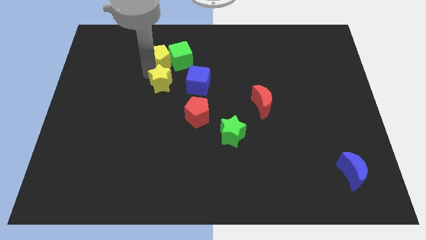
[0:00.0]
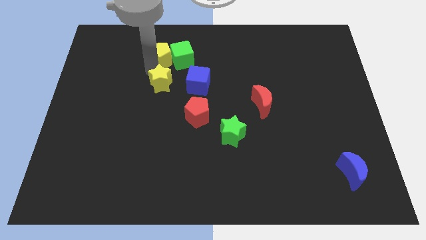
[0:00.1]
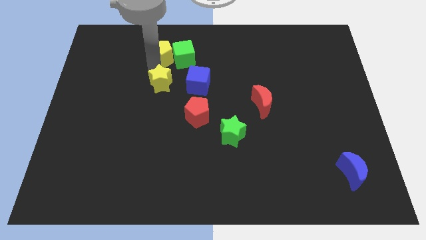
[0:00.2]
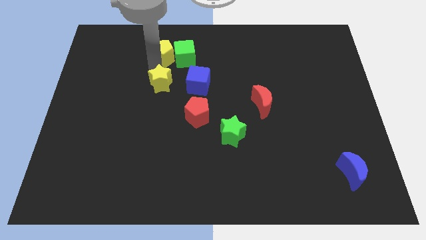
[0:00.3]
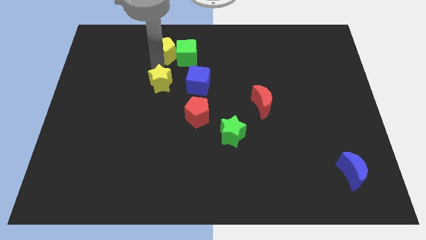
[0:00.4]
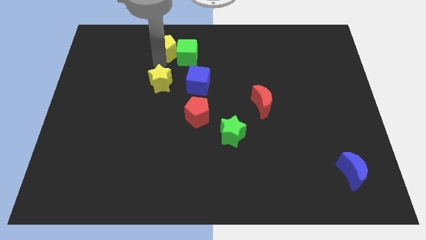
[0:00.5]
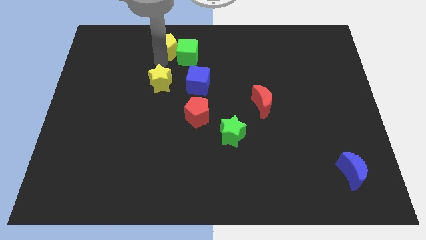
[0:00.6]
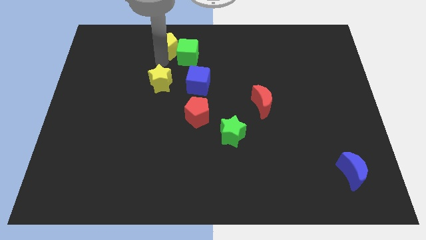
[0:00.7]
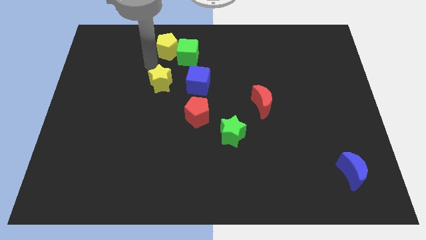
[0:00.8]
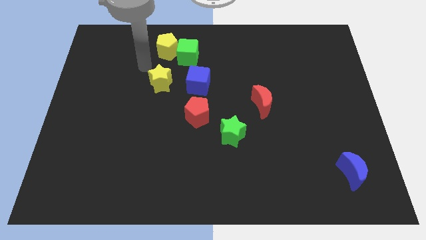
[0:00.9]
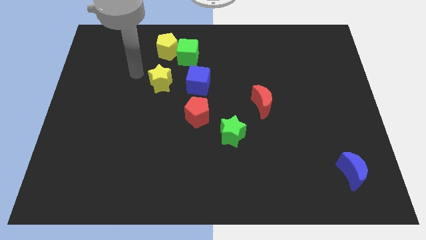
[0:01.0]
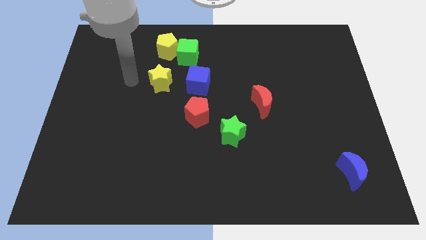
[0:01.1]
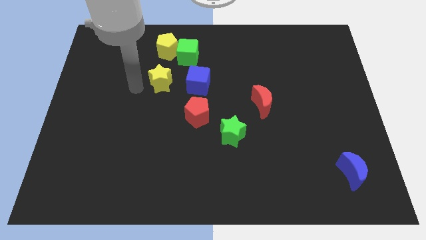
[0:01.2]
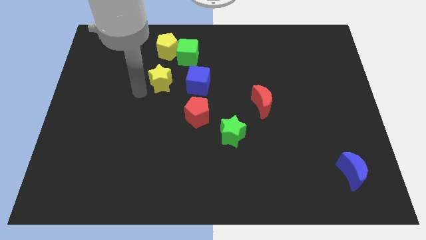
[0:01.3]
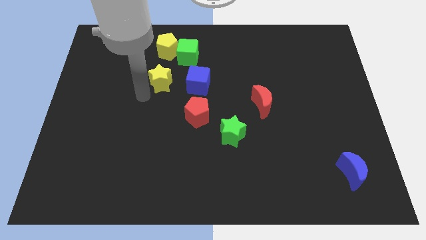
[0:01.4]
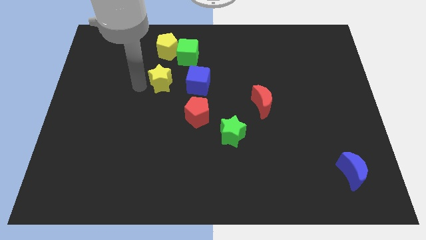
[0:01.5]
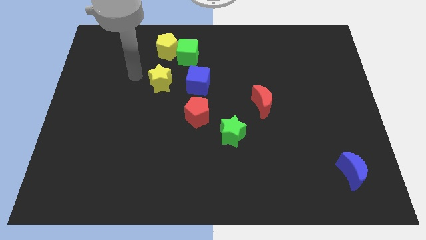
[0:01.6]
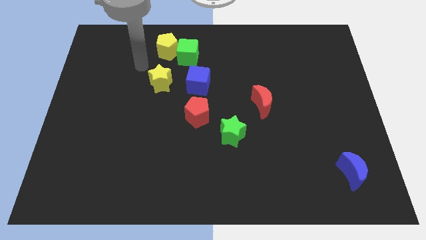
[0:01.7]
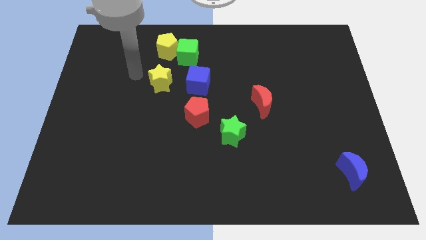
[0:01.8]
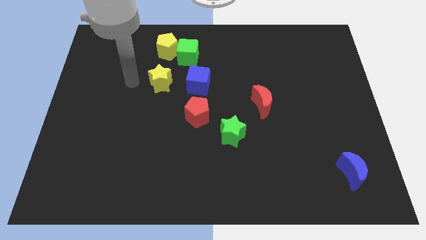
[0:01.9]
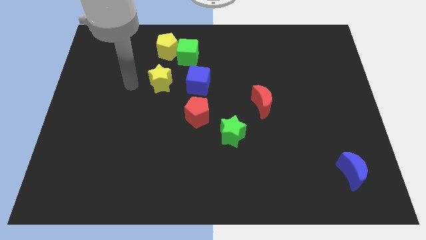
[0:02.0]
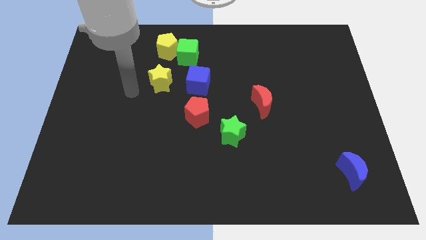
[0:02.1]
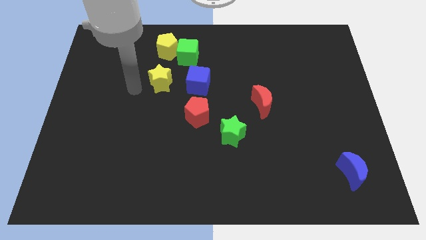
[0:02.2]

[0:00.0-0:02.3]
move the yellow pentagon to the left side of the green cube

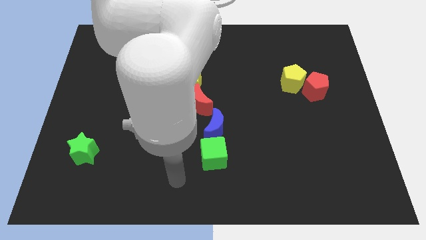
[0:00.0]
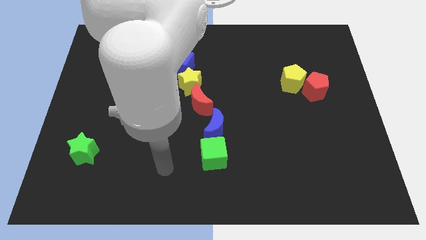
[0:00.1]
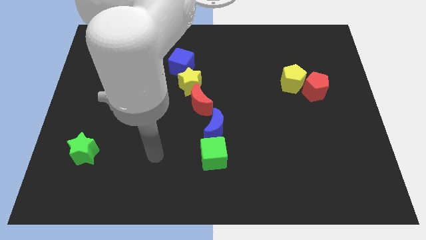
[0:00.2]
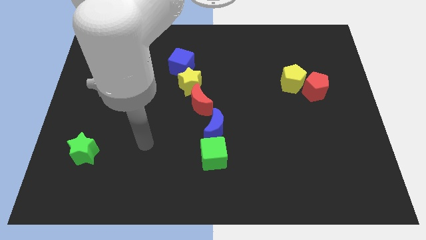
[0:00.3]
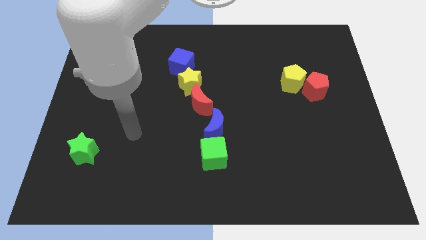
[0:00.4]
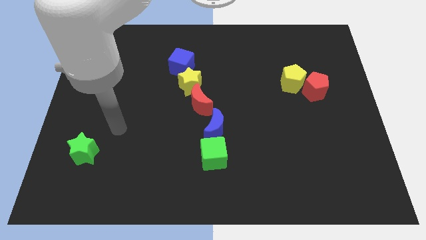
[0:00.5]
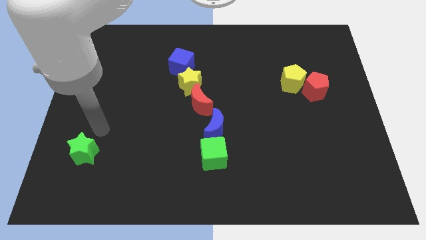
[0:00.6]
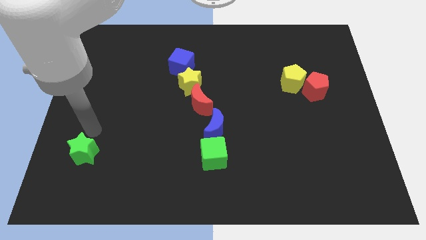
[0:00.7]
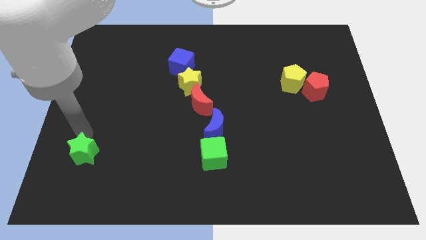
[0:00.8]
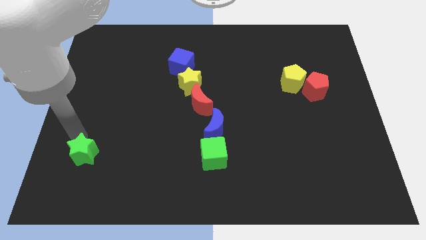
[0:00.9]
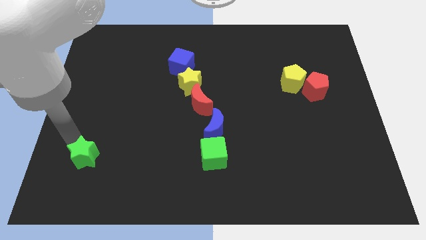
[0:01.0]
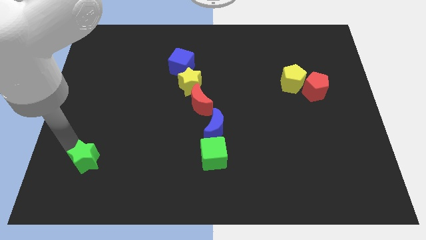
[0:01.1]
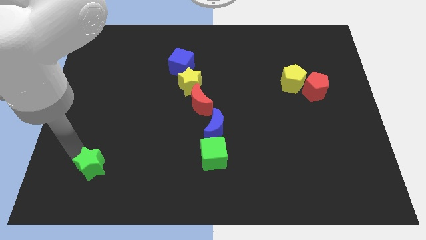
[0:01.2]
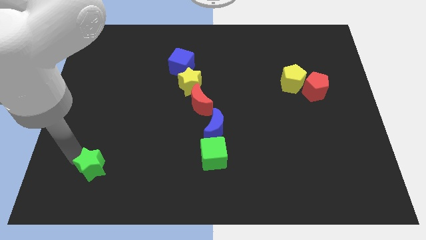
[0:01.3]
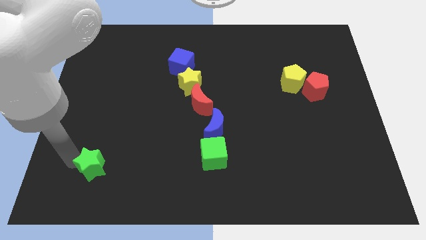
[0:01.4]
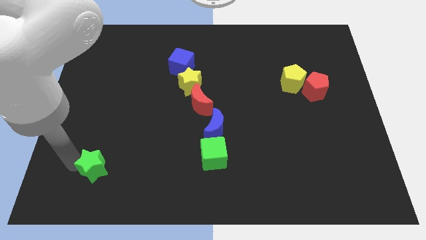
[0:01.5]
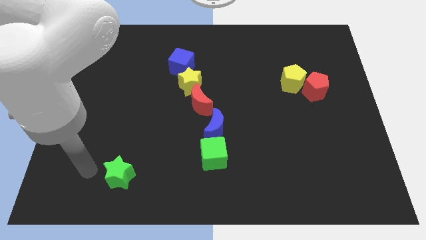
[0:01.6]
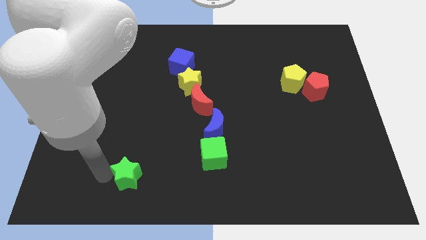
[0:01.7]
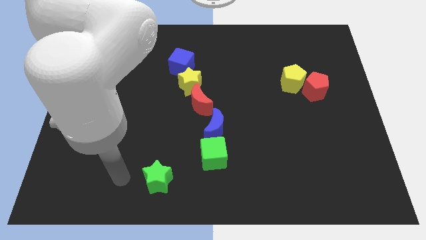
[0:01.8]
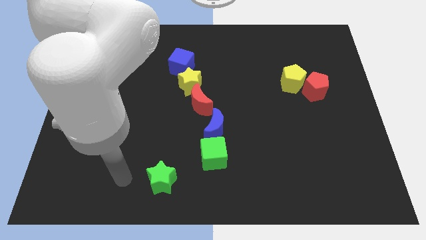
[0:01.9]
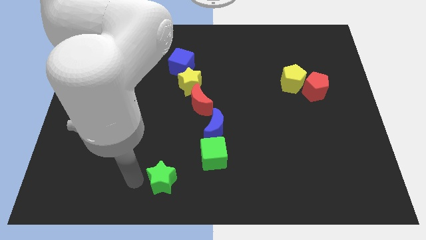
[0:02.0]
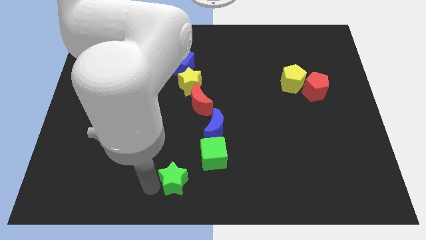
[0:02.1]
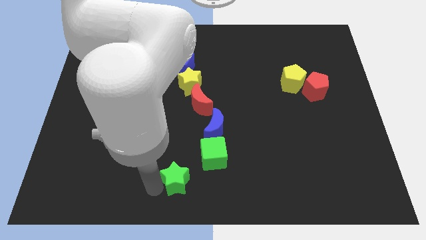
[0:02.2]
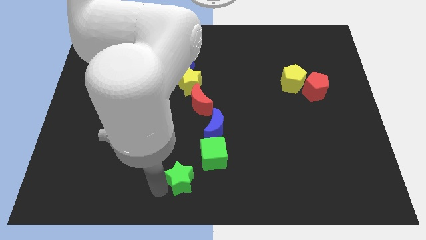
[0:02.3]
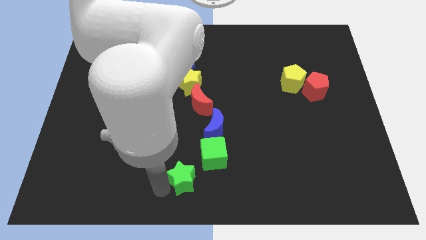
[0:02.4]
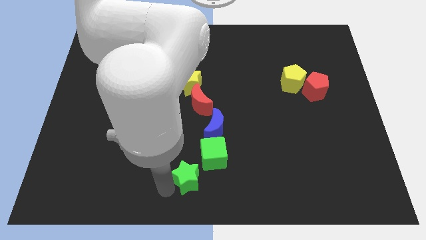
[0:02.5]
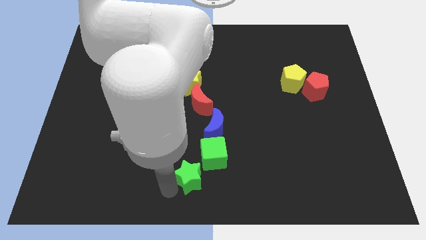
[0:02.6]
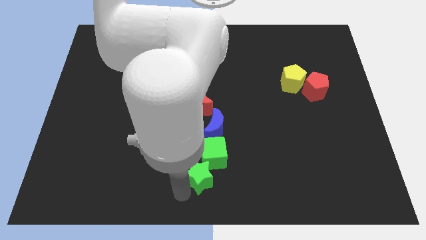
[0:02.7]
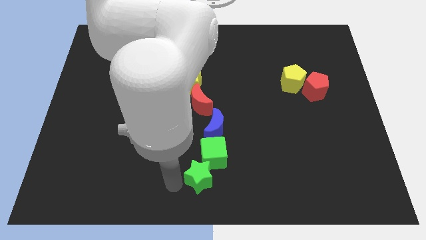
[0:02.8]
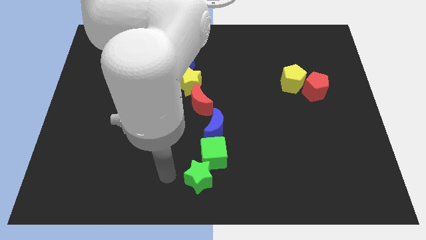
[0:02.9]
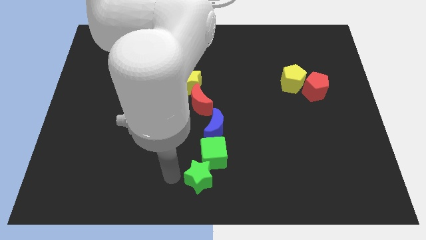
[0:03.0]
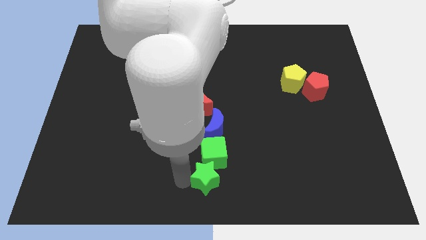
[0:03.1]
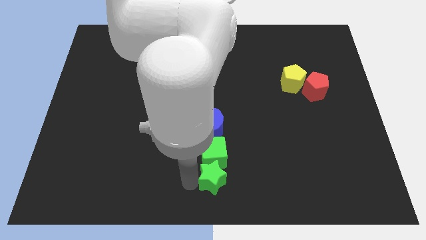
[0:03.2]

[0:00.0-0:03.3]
place the green star below the green cube

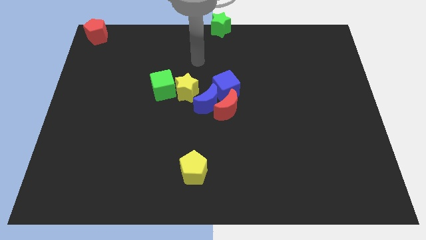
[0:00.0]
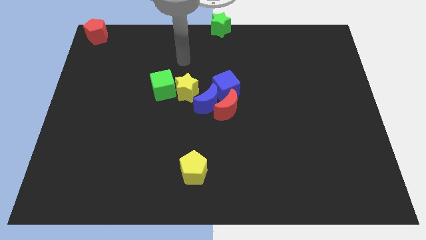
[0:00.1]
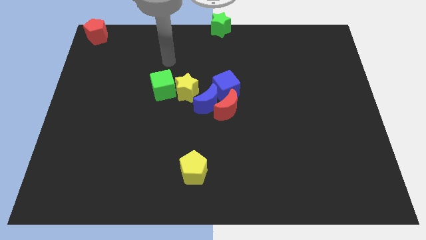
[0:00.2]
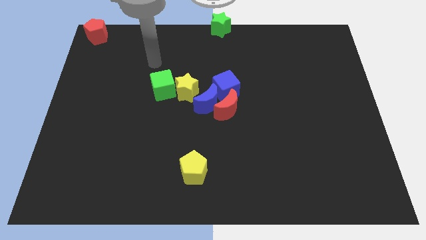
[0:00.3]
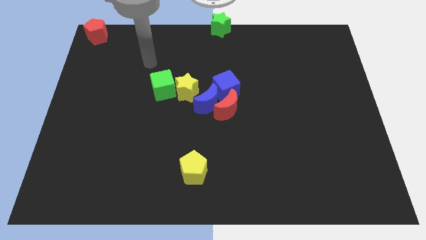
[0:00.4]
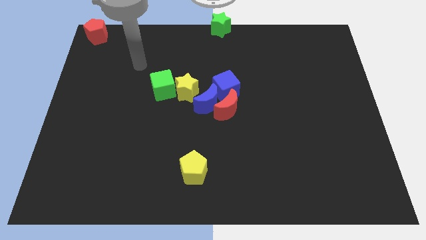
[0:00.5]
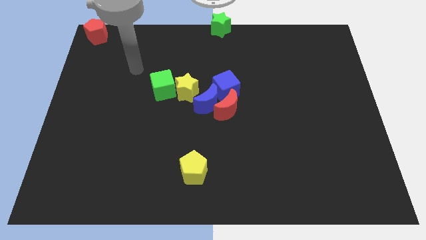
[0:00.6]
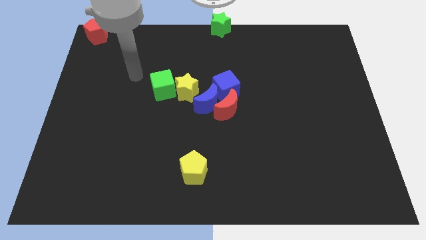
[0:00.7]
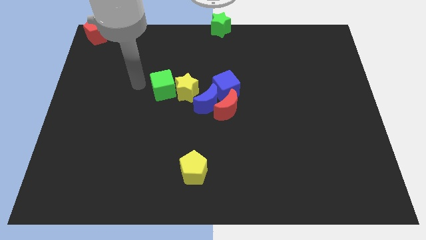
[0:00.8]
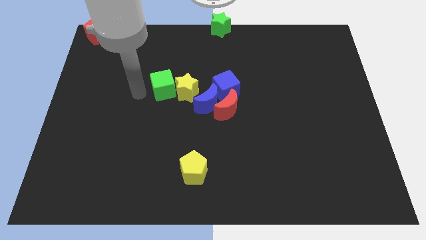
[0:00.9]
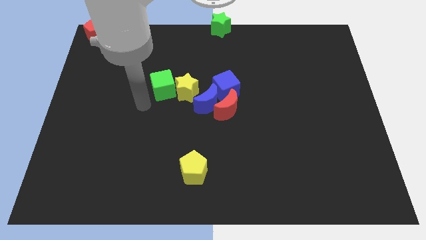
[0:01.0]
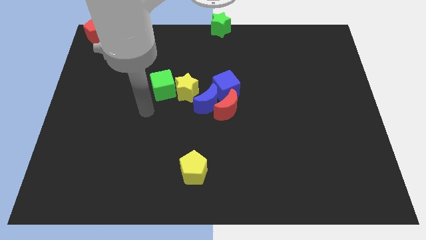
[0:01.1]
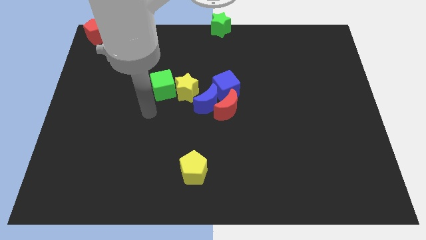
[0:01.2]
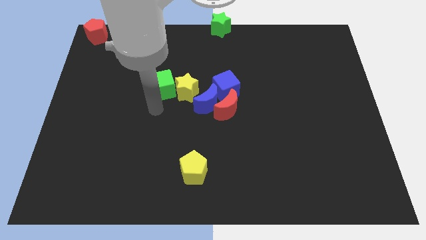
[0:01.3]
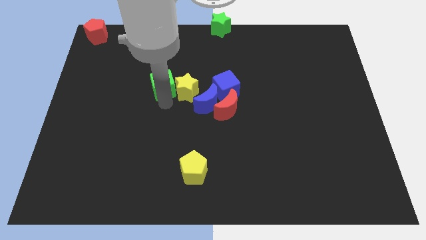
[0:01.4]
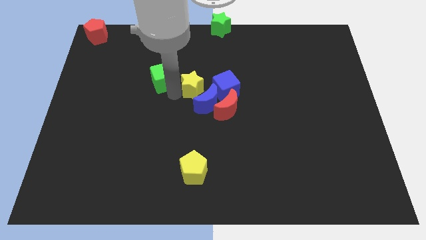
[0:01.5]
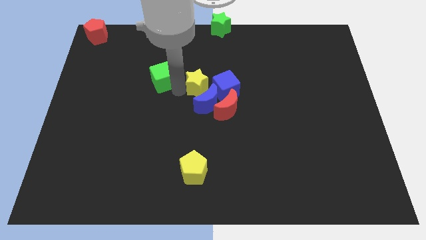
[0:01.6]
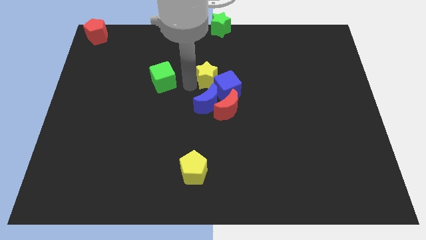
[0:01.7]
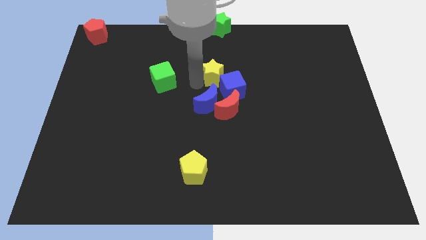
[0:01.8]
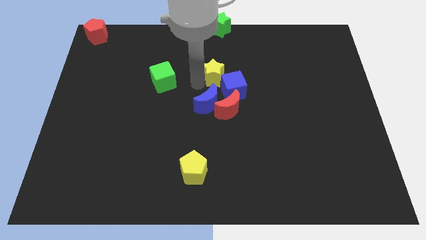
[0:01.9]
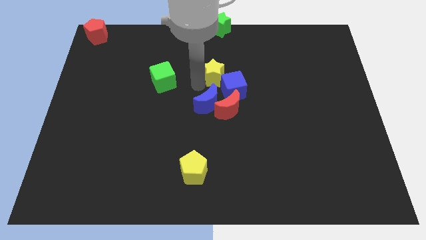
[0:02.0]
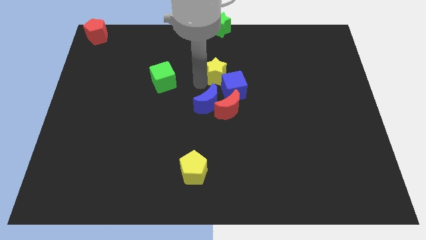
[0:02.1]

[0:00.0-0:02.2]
separate the yellow star and green star

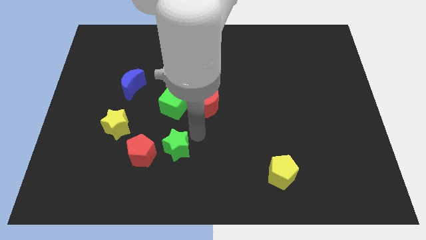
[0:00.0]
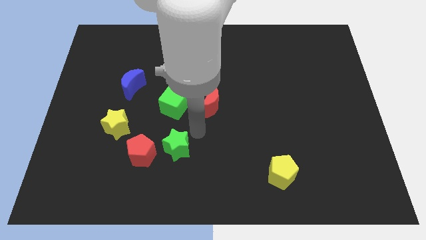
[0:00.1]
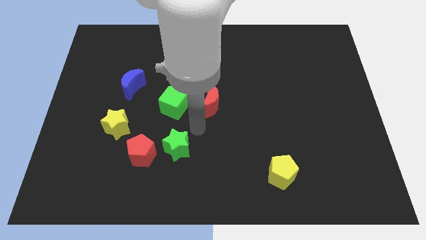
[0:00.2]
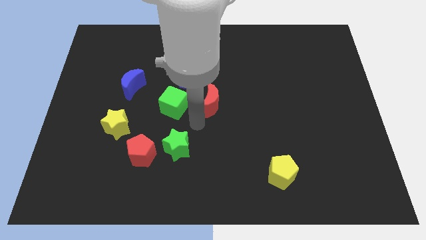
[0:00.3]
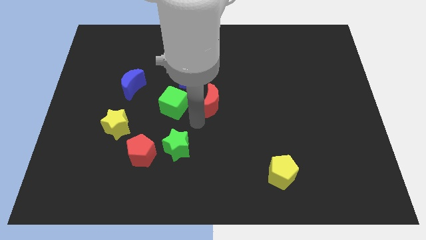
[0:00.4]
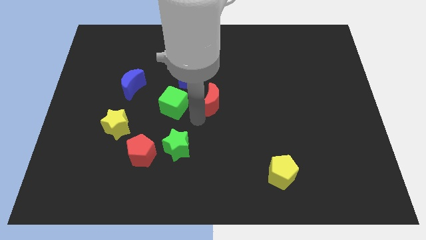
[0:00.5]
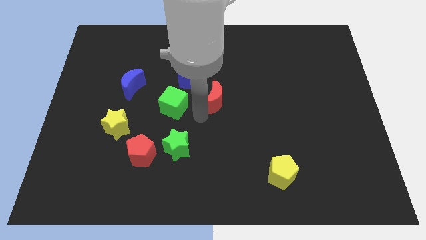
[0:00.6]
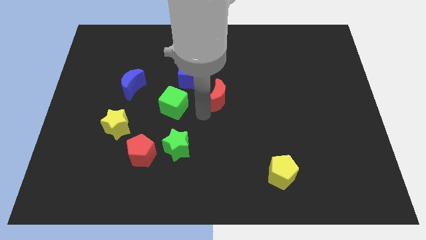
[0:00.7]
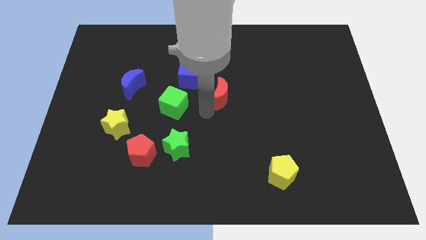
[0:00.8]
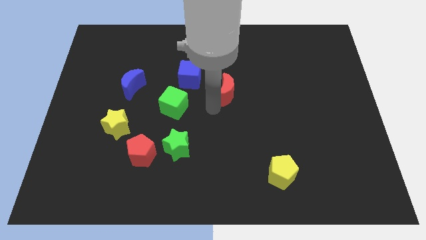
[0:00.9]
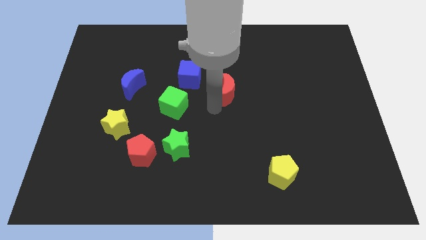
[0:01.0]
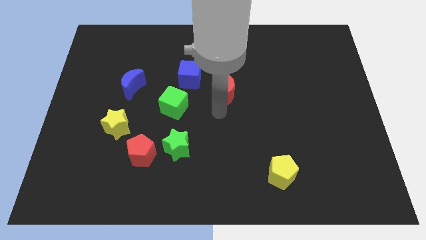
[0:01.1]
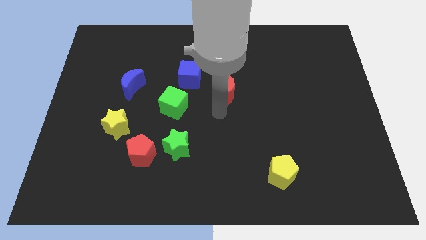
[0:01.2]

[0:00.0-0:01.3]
push the red crescent slightly to the top right
